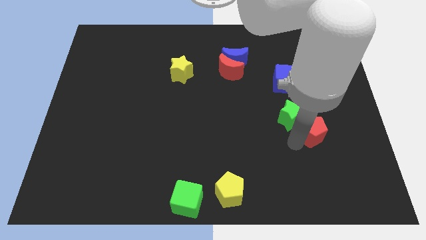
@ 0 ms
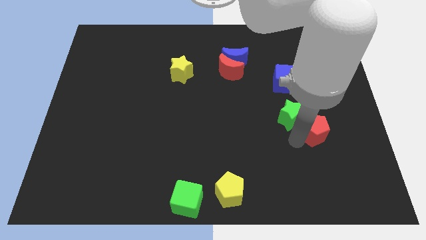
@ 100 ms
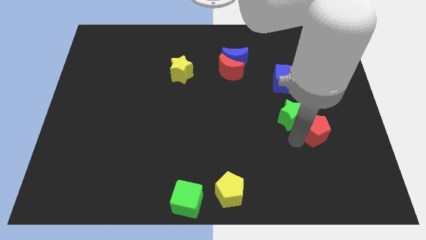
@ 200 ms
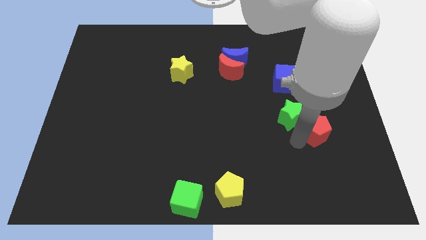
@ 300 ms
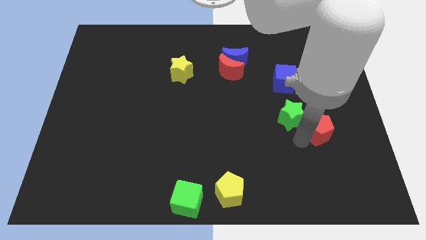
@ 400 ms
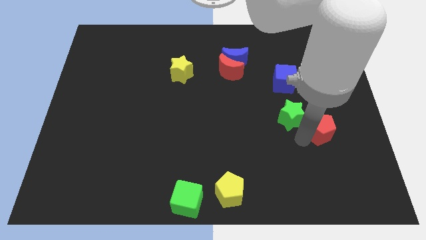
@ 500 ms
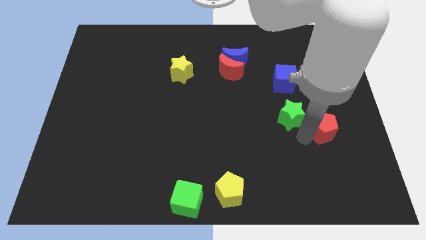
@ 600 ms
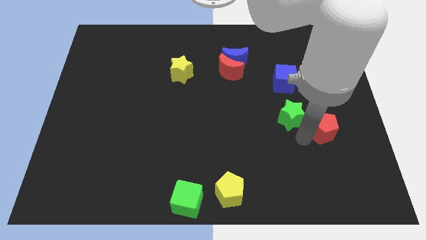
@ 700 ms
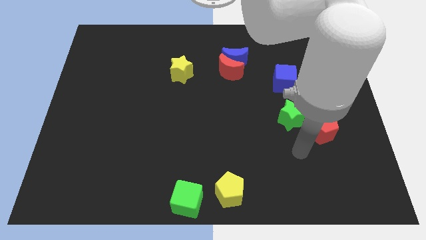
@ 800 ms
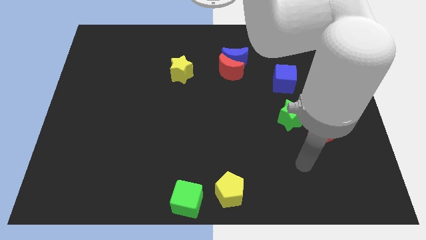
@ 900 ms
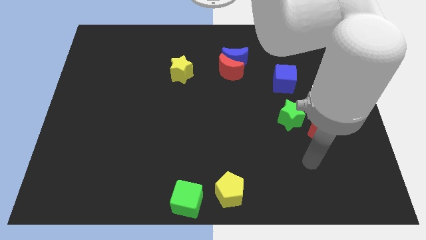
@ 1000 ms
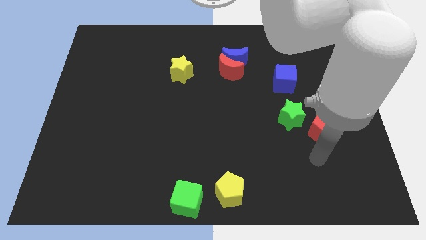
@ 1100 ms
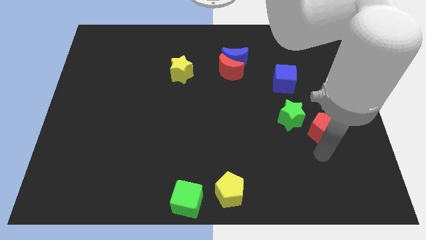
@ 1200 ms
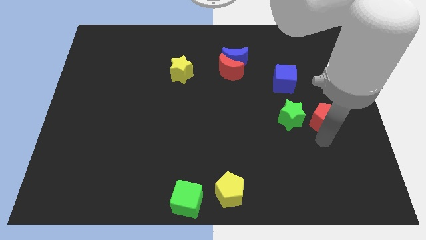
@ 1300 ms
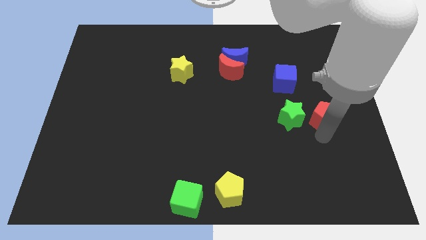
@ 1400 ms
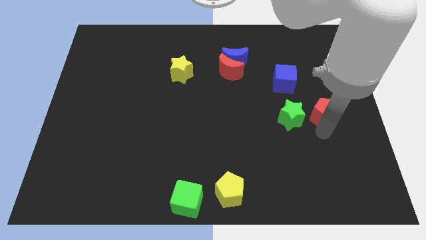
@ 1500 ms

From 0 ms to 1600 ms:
place the red pentagon at the right of the green star

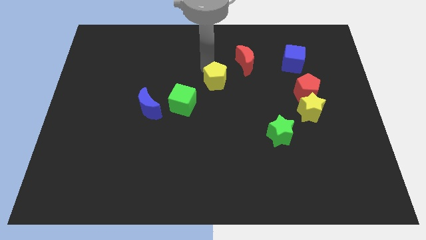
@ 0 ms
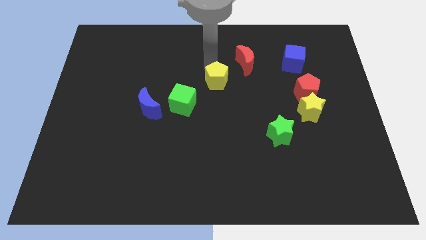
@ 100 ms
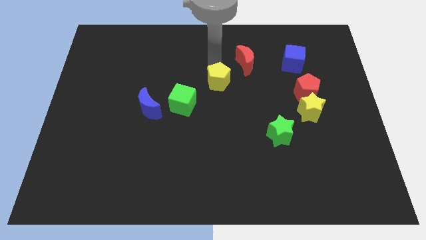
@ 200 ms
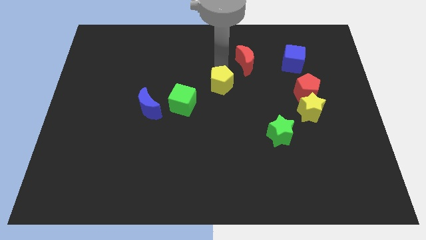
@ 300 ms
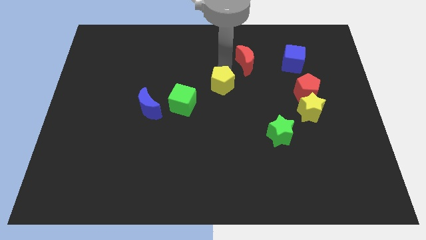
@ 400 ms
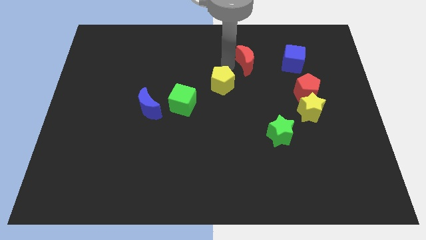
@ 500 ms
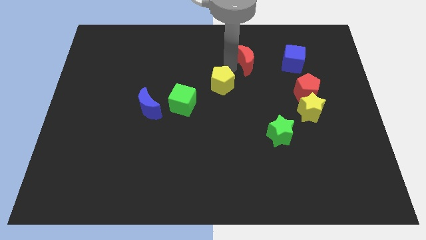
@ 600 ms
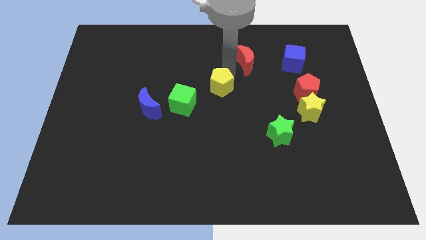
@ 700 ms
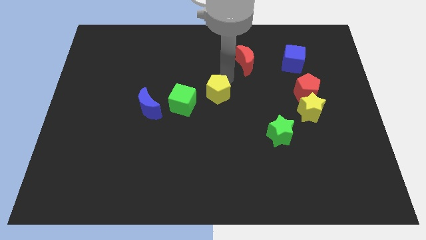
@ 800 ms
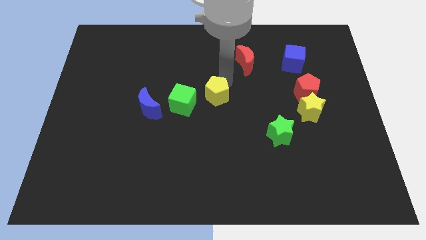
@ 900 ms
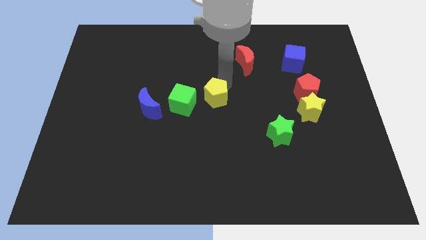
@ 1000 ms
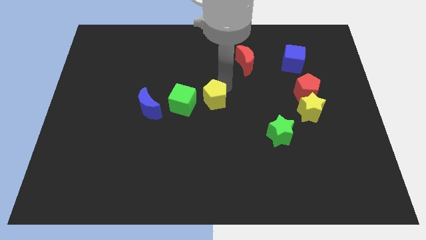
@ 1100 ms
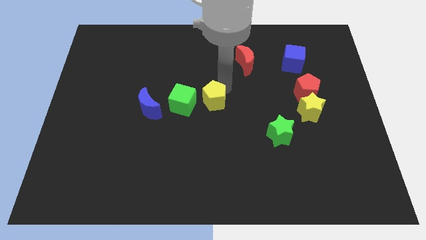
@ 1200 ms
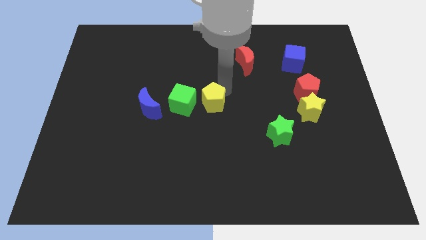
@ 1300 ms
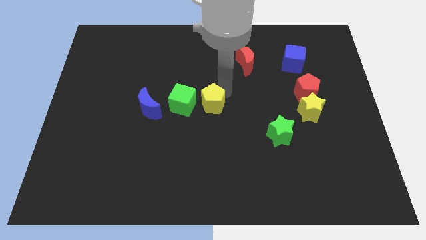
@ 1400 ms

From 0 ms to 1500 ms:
move the yellow pentagon towards the center of the board

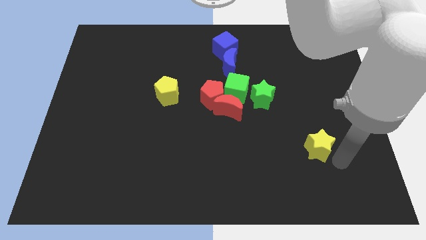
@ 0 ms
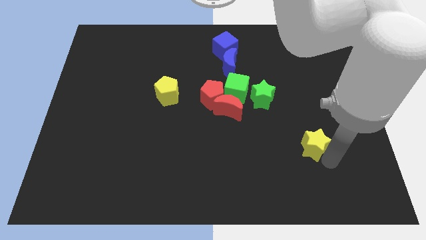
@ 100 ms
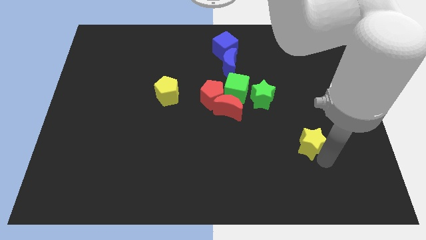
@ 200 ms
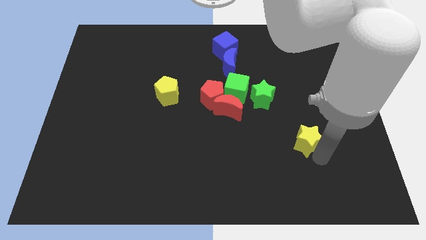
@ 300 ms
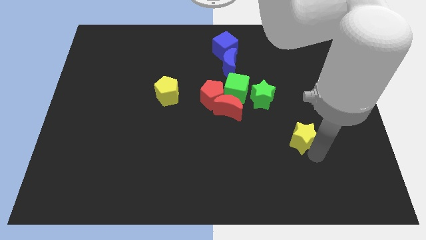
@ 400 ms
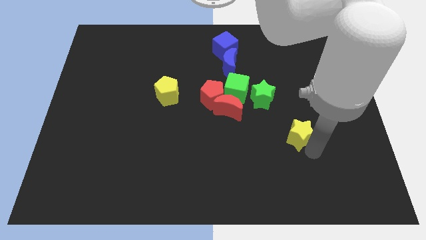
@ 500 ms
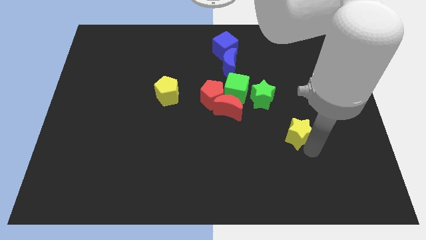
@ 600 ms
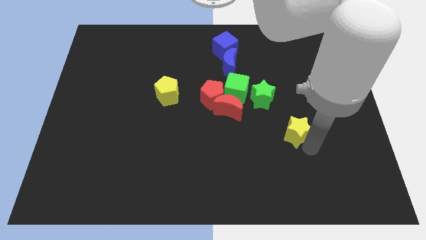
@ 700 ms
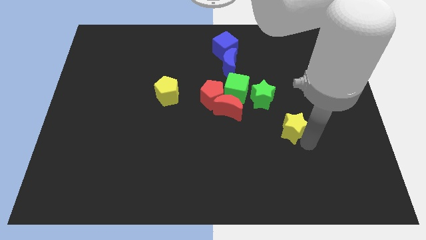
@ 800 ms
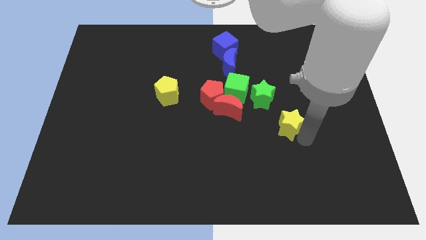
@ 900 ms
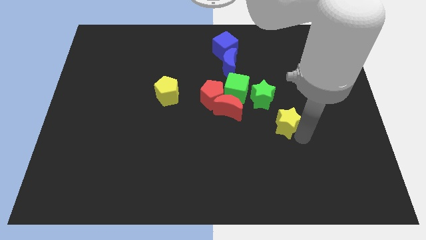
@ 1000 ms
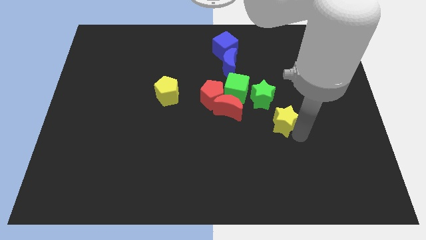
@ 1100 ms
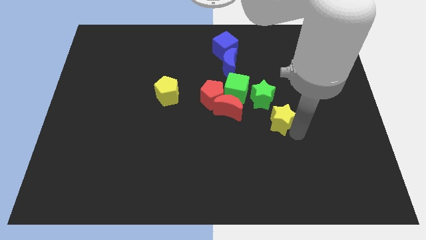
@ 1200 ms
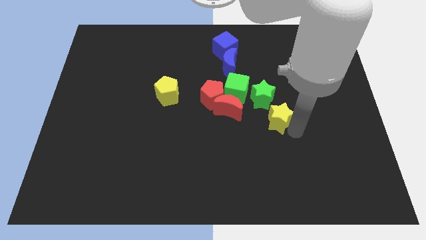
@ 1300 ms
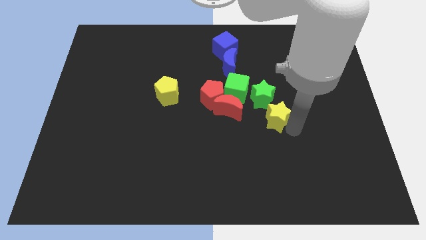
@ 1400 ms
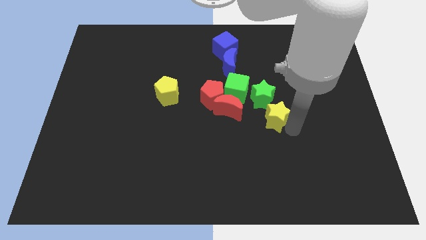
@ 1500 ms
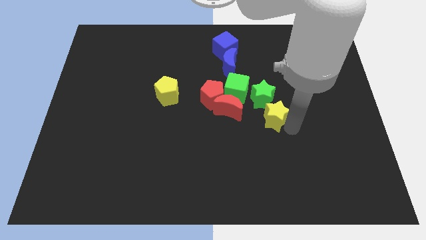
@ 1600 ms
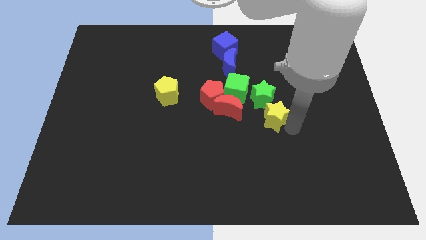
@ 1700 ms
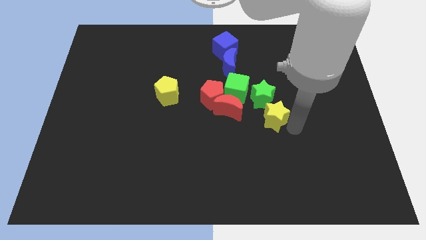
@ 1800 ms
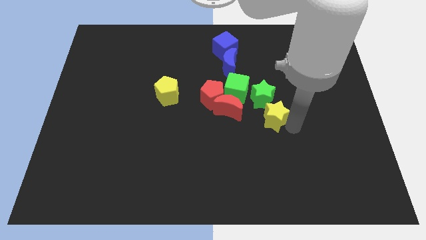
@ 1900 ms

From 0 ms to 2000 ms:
put the yellow star at the bottom right of the green star

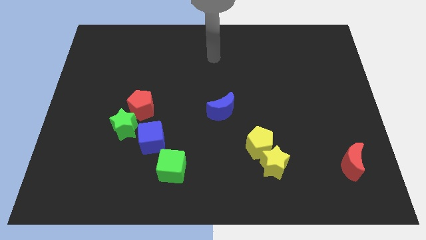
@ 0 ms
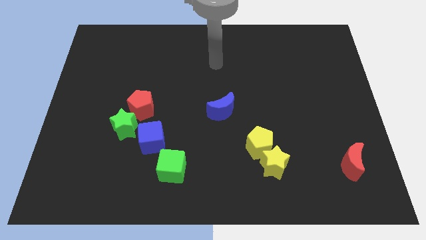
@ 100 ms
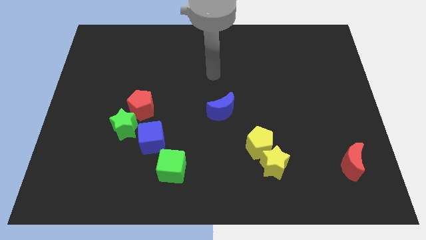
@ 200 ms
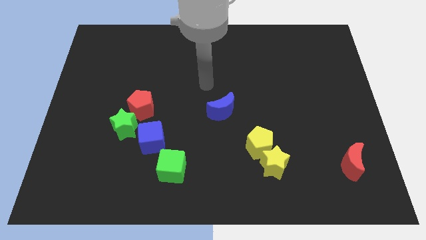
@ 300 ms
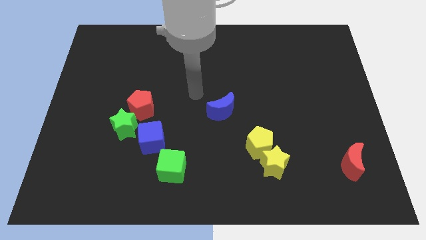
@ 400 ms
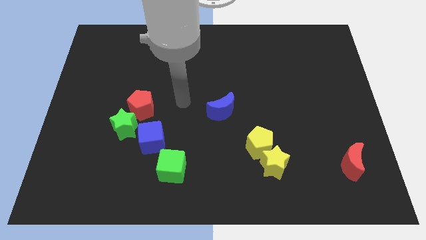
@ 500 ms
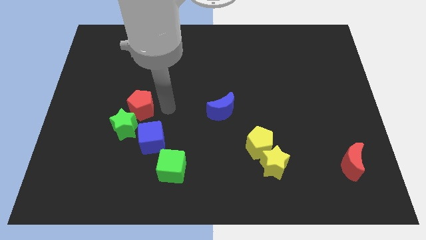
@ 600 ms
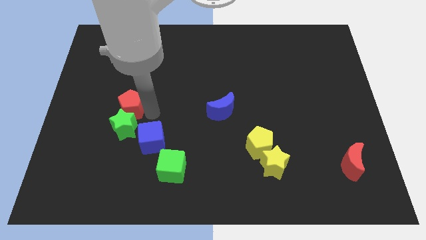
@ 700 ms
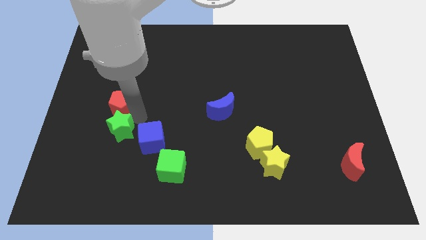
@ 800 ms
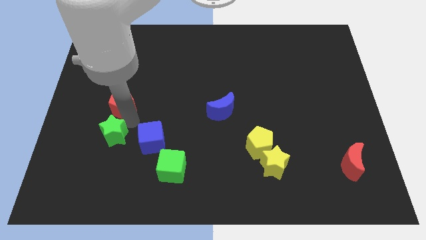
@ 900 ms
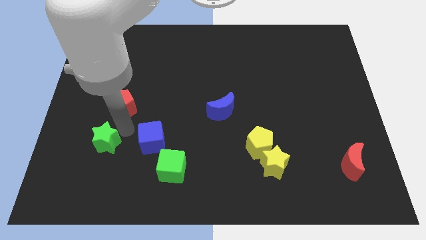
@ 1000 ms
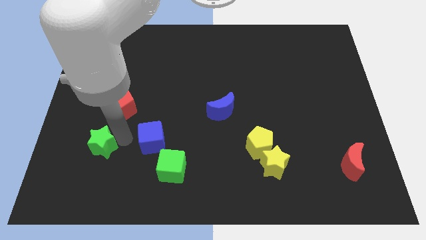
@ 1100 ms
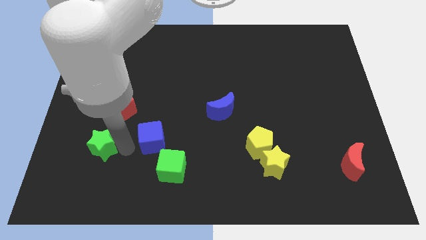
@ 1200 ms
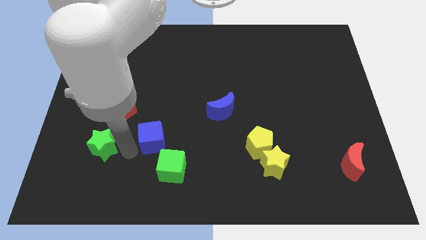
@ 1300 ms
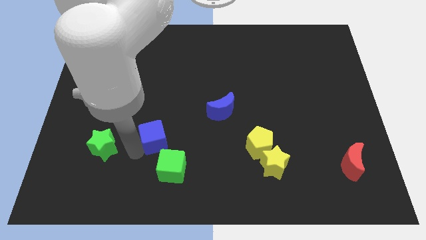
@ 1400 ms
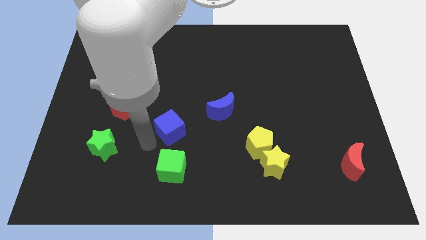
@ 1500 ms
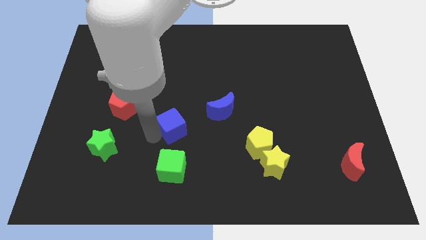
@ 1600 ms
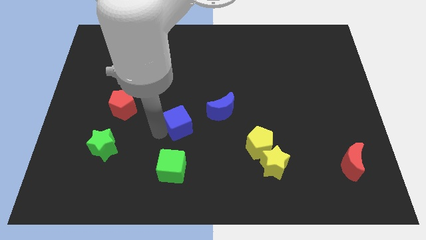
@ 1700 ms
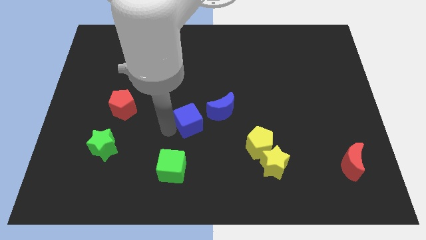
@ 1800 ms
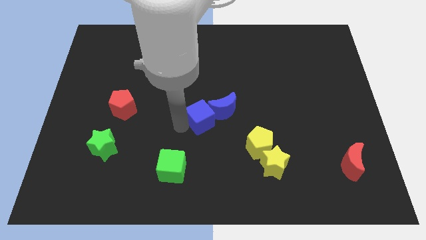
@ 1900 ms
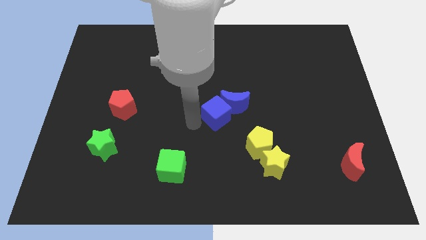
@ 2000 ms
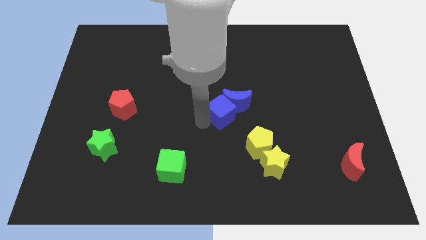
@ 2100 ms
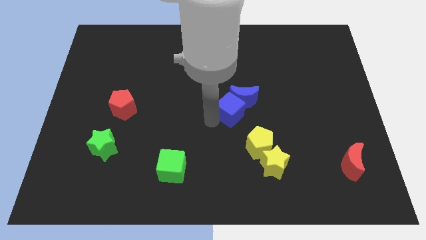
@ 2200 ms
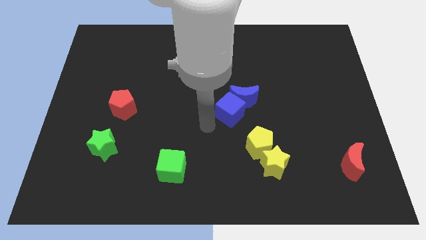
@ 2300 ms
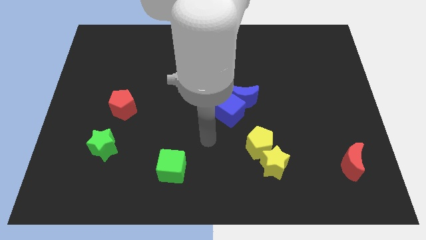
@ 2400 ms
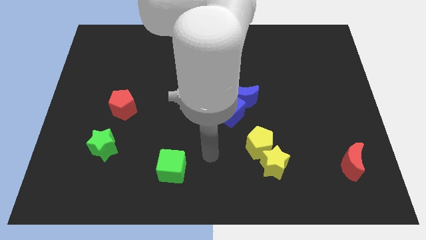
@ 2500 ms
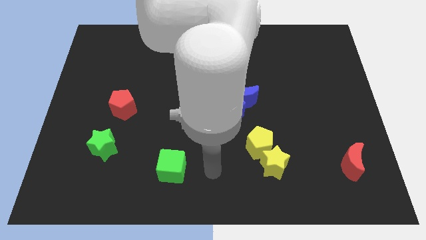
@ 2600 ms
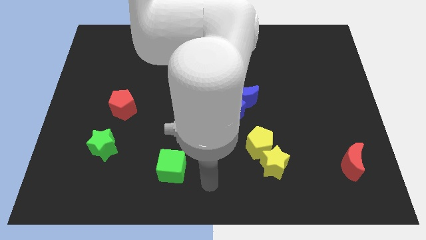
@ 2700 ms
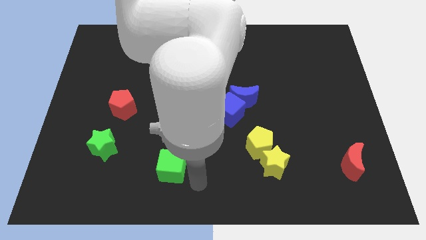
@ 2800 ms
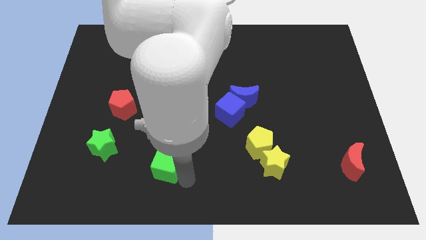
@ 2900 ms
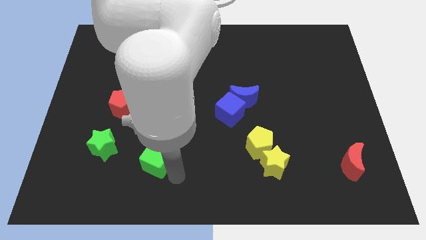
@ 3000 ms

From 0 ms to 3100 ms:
push the blue cube into the blue crescent

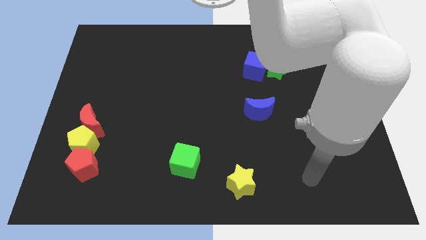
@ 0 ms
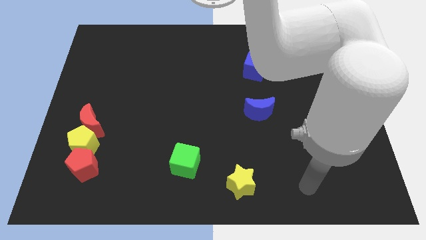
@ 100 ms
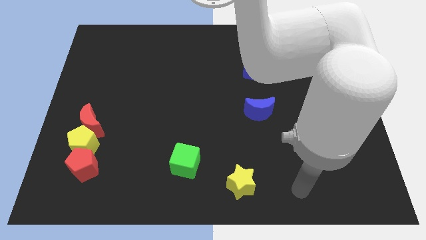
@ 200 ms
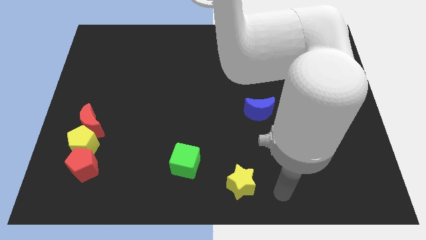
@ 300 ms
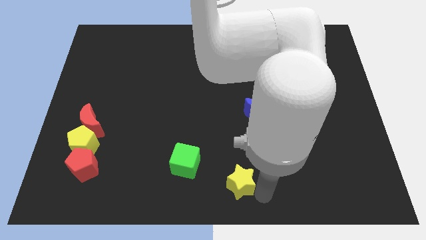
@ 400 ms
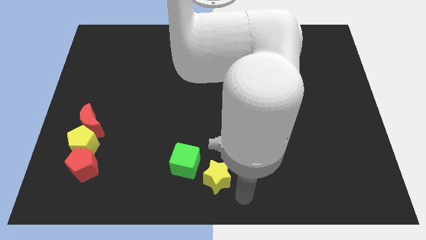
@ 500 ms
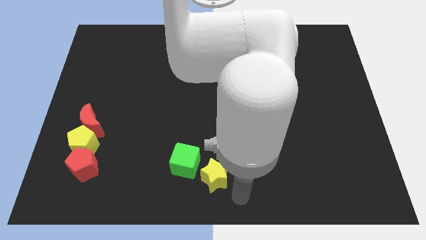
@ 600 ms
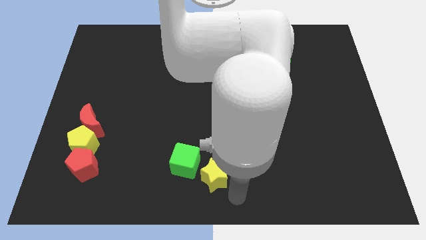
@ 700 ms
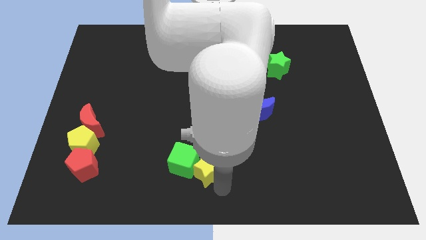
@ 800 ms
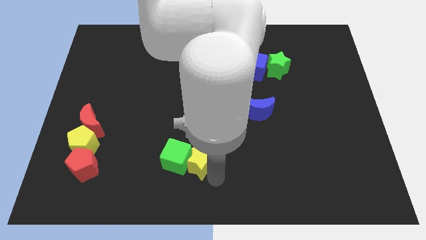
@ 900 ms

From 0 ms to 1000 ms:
push the yellow star towards the green cube
